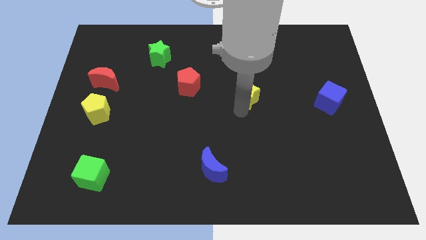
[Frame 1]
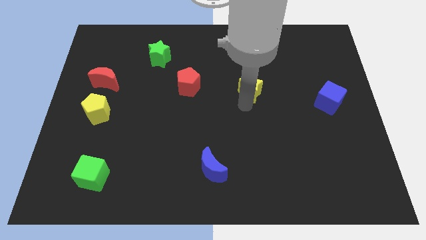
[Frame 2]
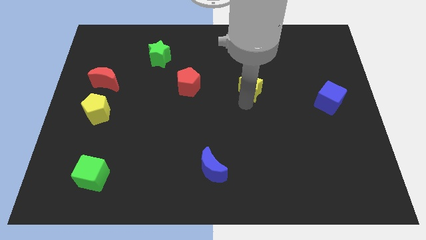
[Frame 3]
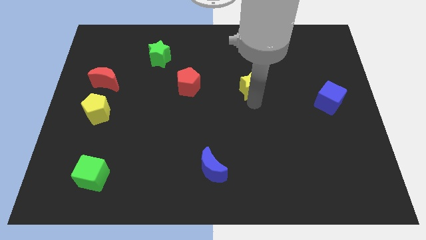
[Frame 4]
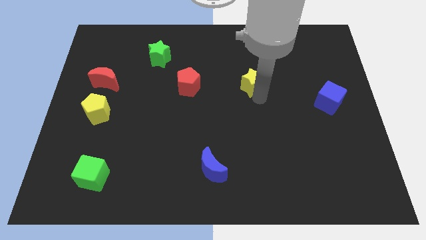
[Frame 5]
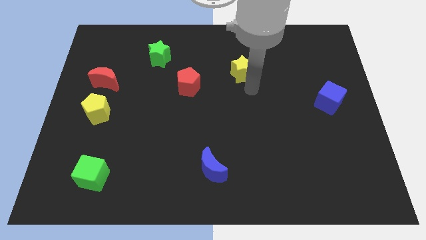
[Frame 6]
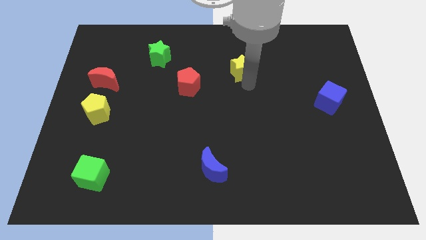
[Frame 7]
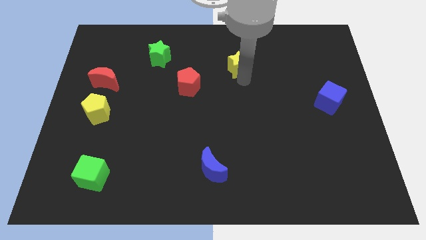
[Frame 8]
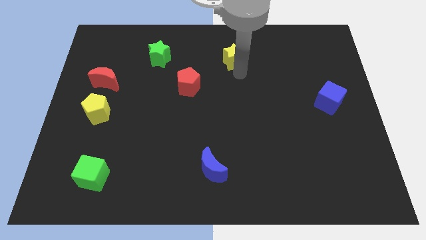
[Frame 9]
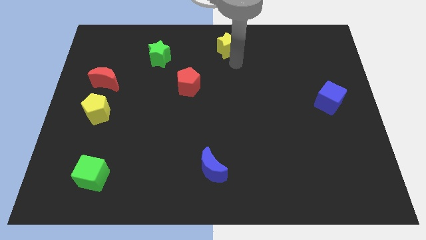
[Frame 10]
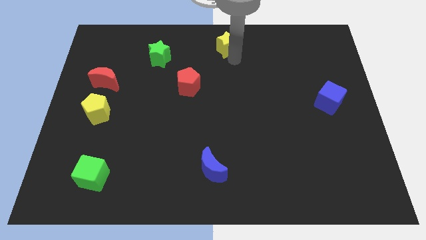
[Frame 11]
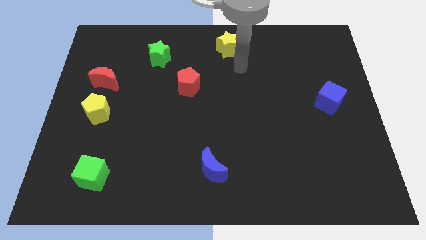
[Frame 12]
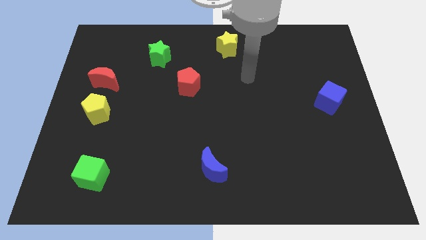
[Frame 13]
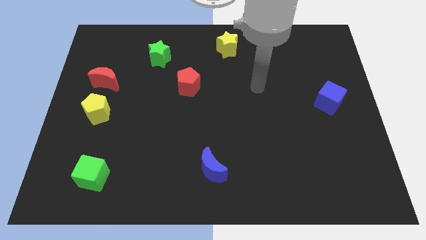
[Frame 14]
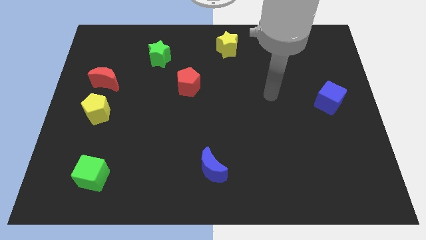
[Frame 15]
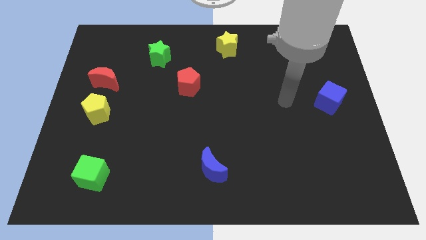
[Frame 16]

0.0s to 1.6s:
push yellow star to the top center of the board

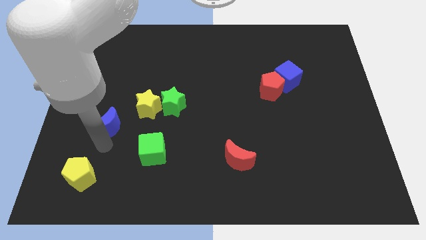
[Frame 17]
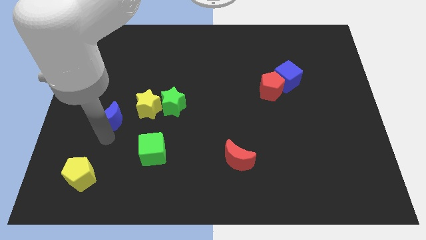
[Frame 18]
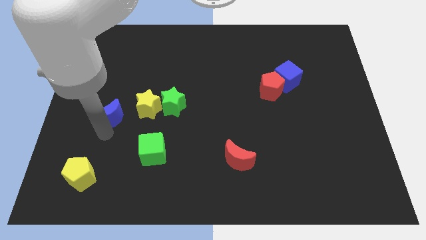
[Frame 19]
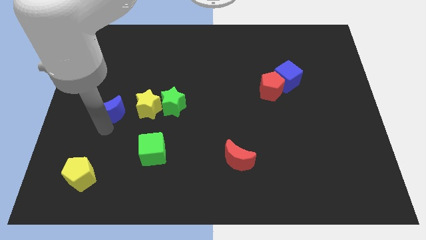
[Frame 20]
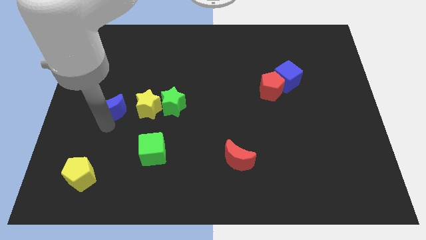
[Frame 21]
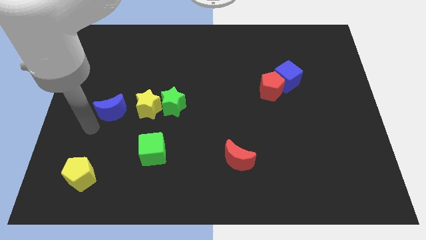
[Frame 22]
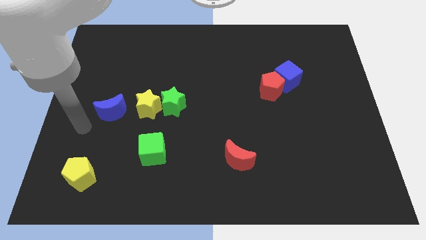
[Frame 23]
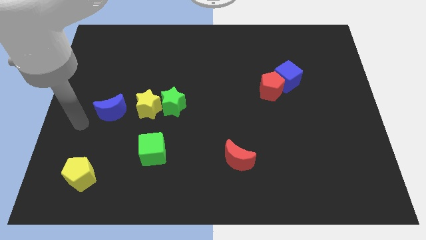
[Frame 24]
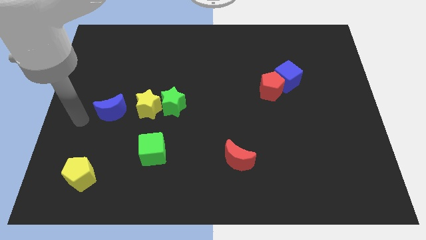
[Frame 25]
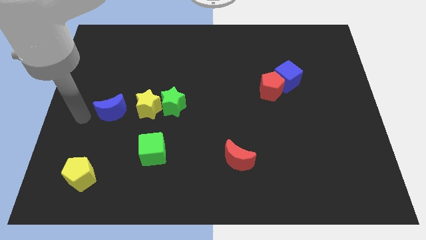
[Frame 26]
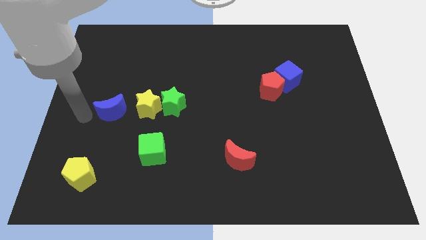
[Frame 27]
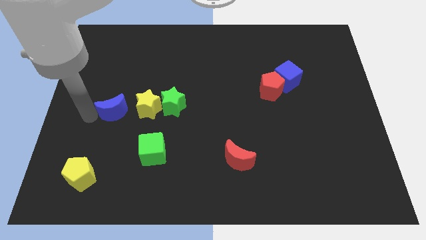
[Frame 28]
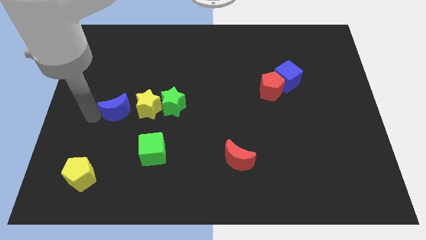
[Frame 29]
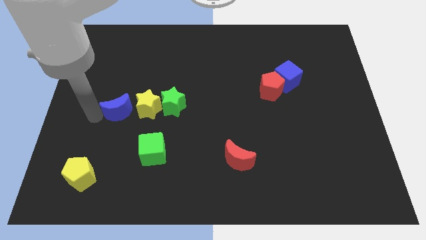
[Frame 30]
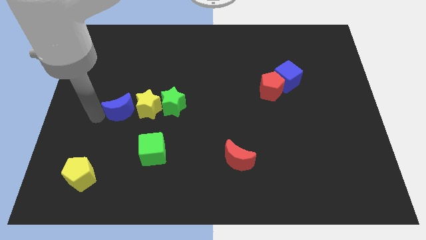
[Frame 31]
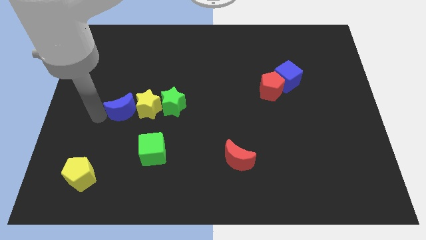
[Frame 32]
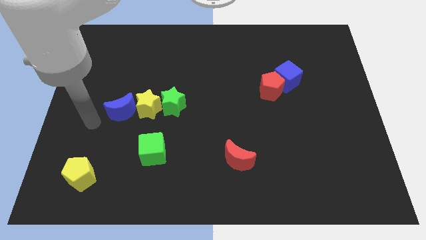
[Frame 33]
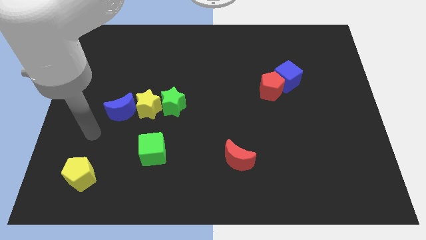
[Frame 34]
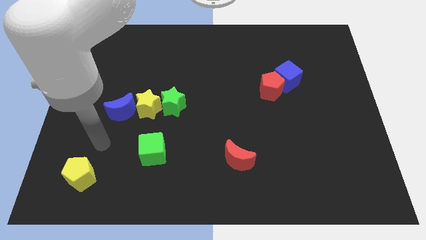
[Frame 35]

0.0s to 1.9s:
move blue crescent to the left of the yellow star

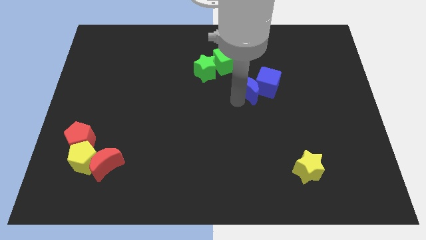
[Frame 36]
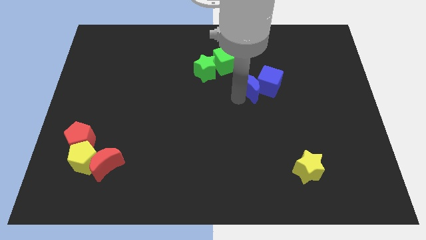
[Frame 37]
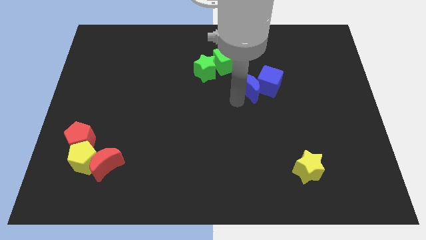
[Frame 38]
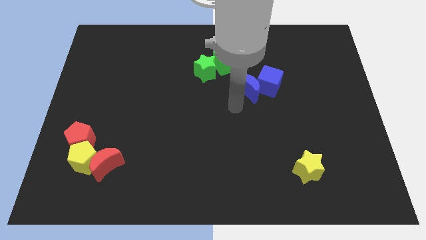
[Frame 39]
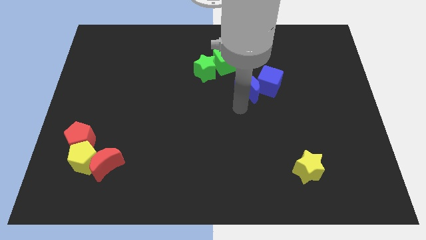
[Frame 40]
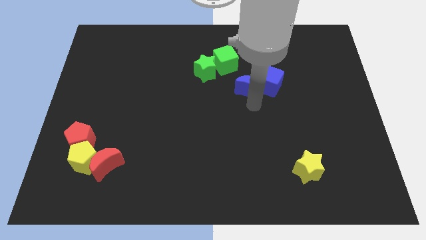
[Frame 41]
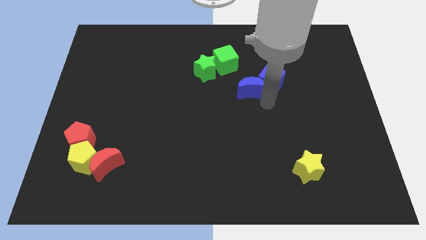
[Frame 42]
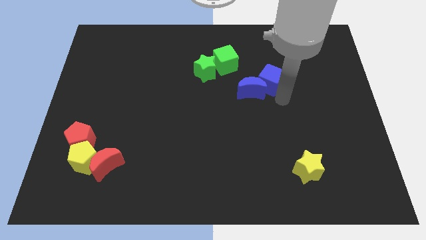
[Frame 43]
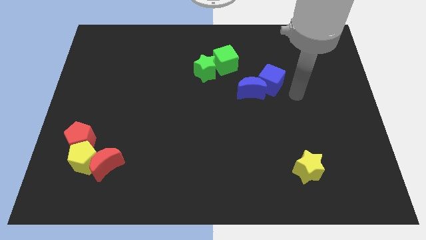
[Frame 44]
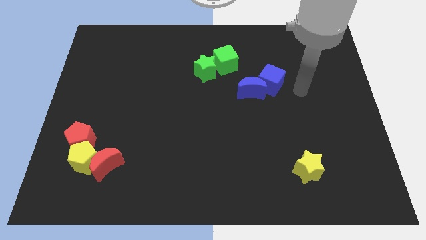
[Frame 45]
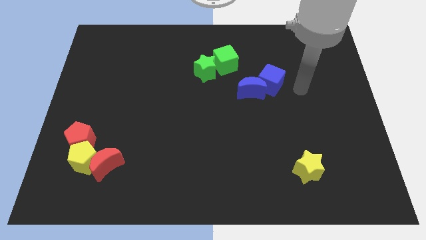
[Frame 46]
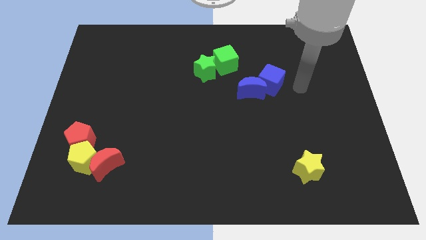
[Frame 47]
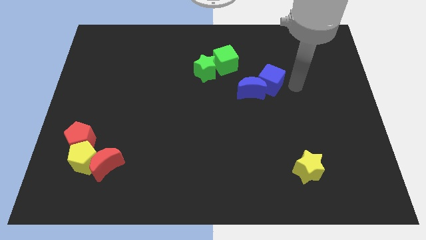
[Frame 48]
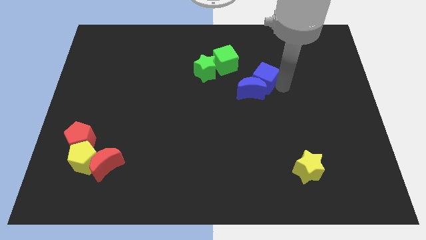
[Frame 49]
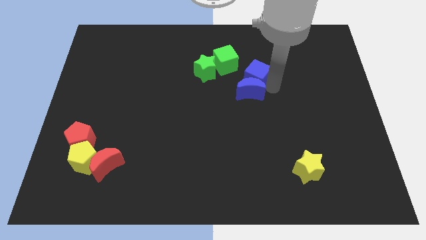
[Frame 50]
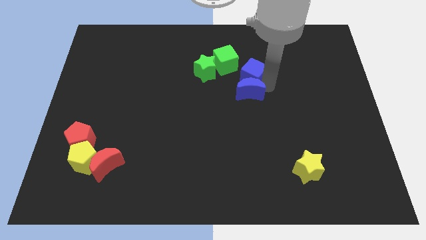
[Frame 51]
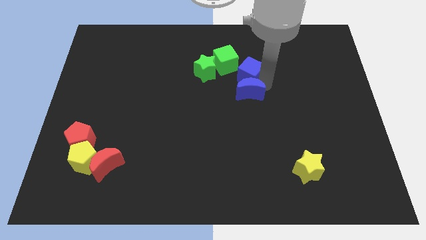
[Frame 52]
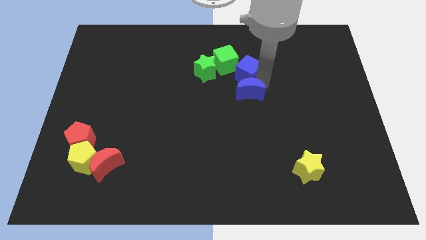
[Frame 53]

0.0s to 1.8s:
move blue cube towards the green cube

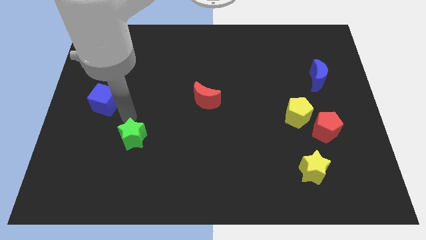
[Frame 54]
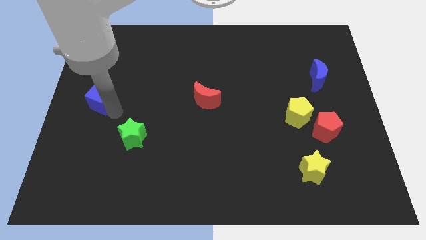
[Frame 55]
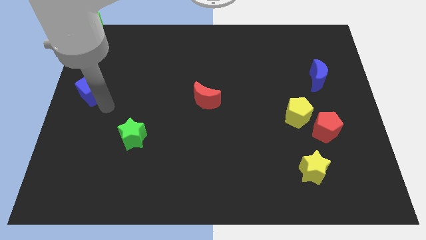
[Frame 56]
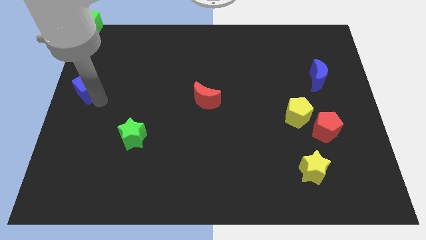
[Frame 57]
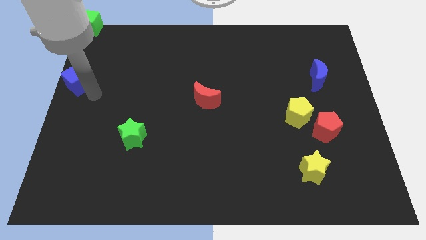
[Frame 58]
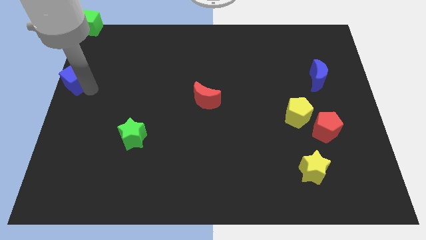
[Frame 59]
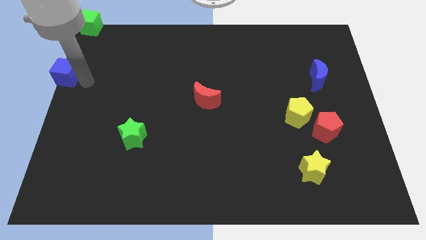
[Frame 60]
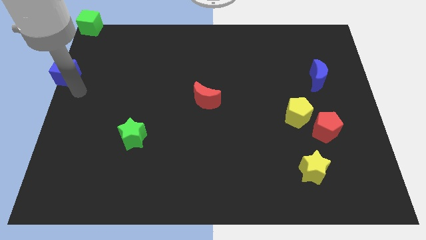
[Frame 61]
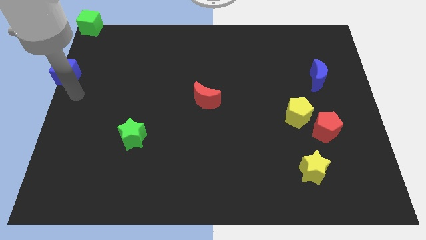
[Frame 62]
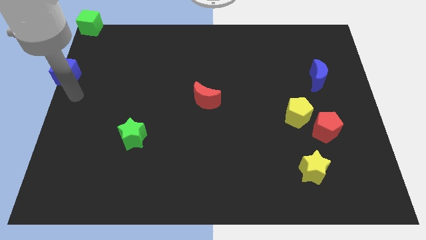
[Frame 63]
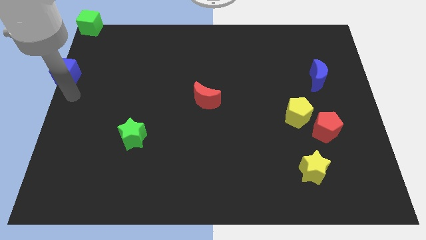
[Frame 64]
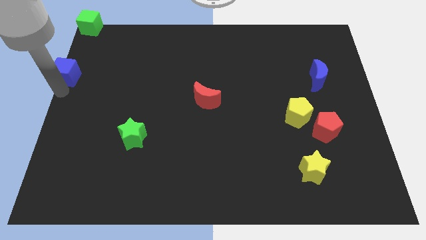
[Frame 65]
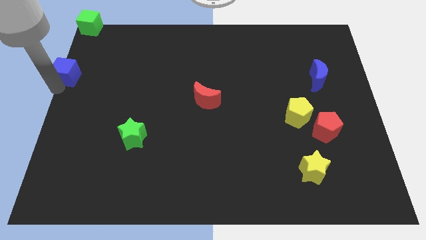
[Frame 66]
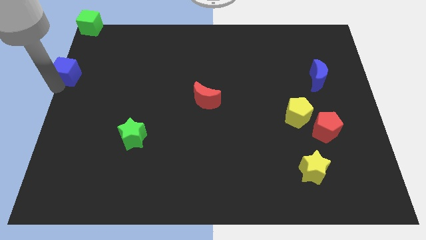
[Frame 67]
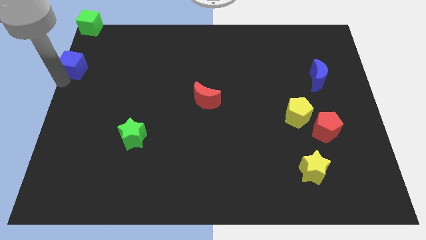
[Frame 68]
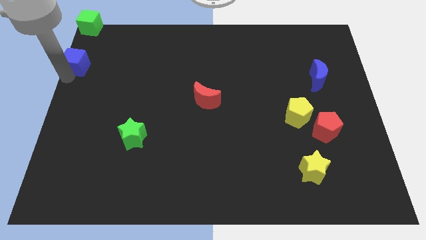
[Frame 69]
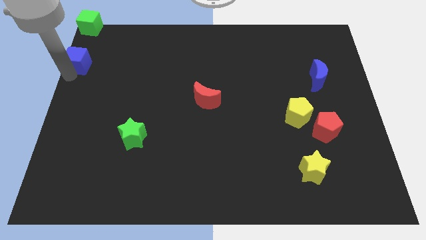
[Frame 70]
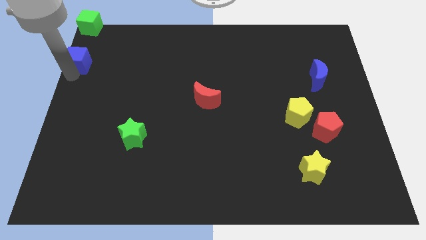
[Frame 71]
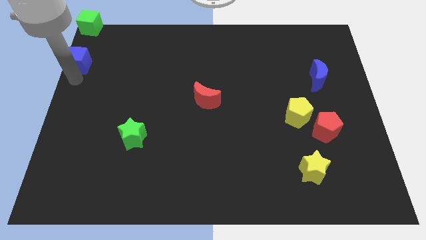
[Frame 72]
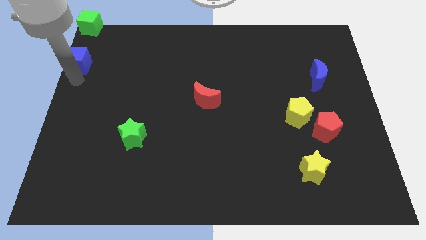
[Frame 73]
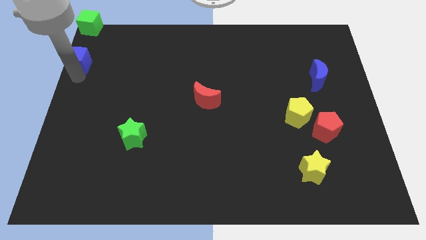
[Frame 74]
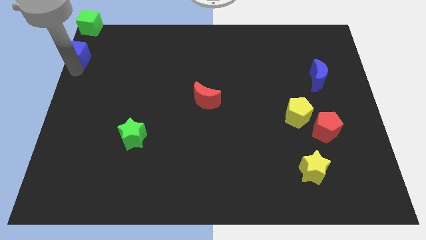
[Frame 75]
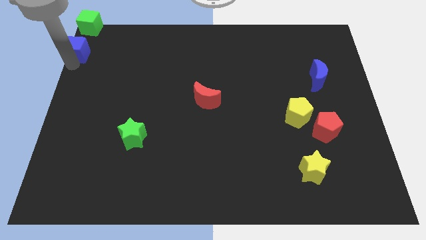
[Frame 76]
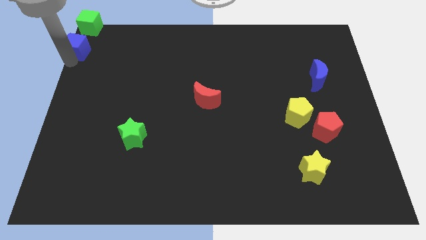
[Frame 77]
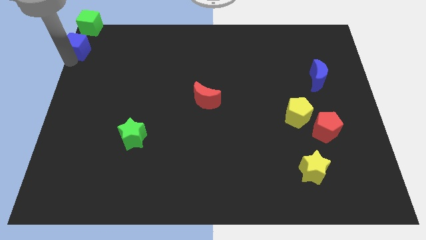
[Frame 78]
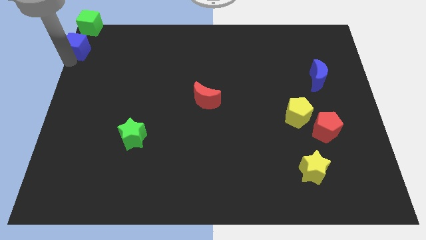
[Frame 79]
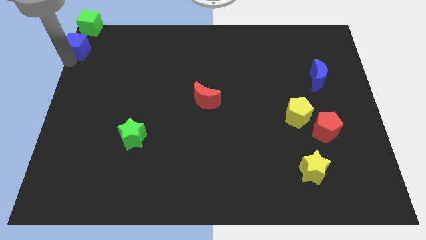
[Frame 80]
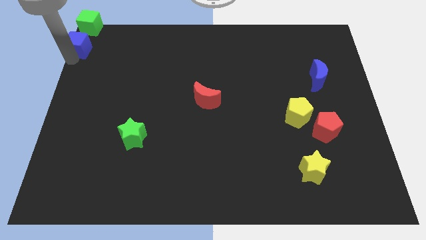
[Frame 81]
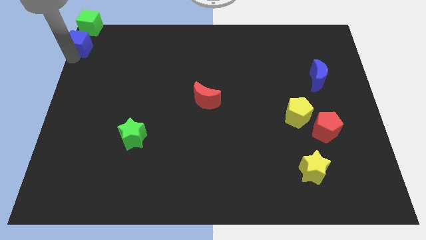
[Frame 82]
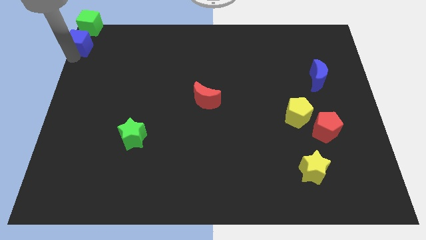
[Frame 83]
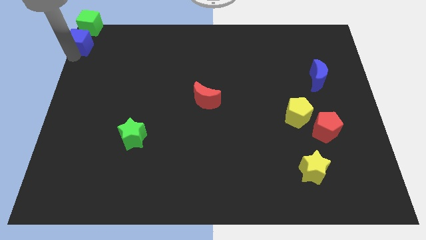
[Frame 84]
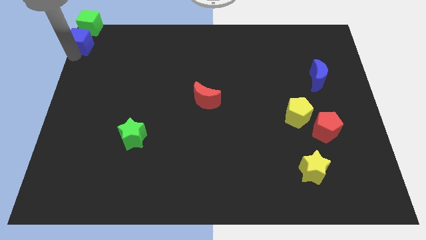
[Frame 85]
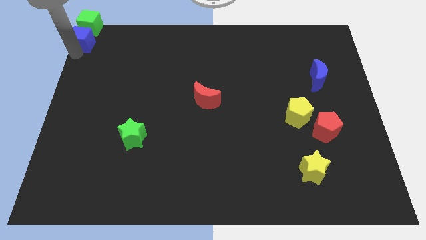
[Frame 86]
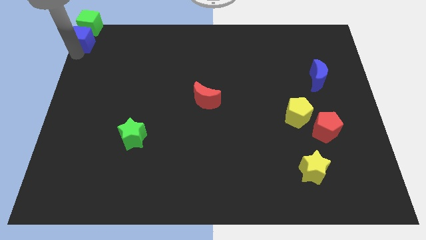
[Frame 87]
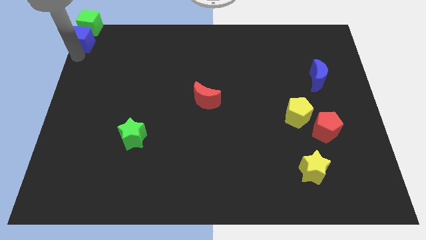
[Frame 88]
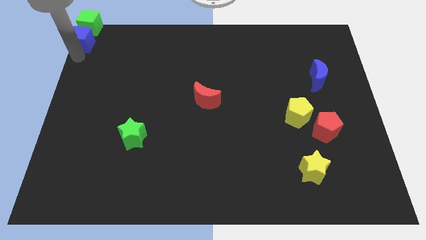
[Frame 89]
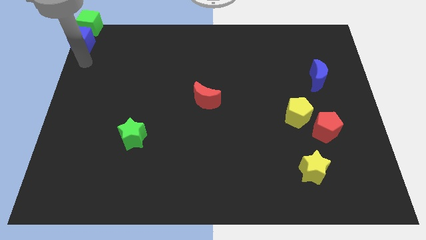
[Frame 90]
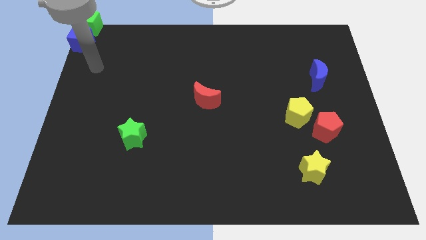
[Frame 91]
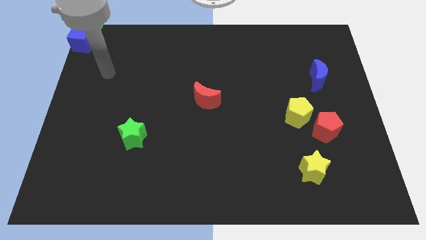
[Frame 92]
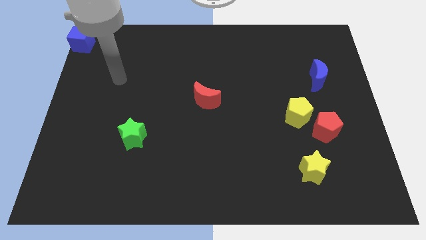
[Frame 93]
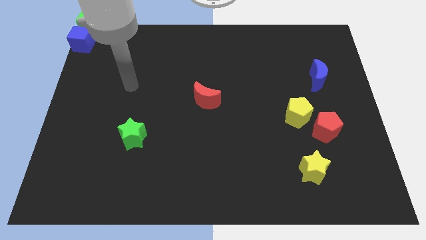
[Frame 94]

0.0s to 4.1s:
move the blue cube to the bottom of green cube
